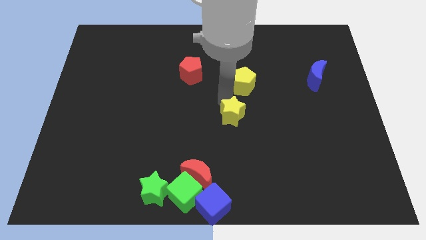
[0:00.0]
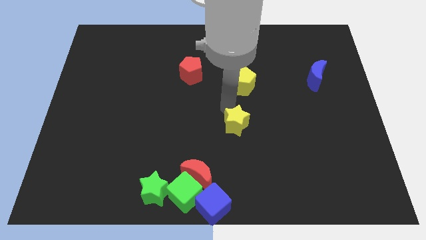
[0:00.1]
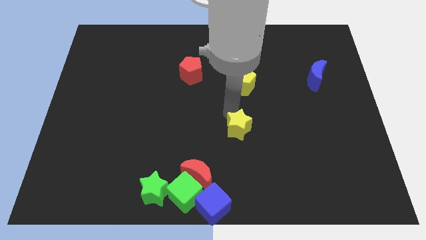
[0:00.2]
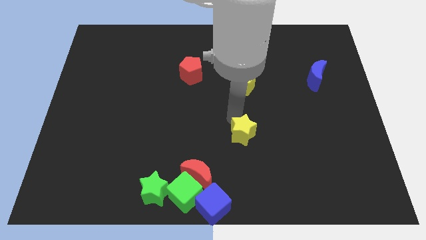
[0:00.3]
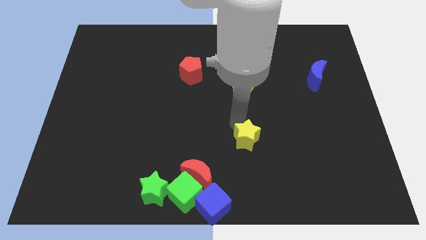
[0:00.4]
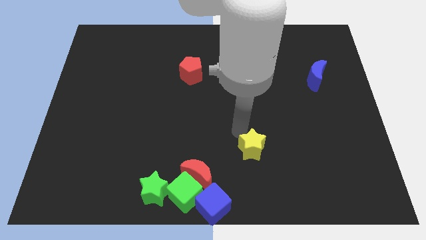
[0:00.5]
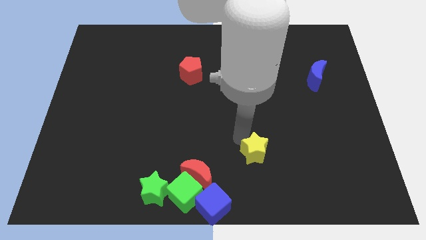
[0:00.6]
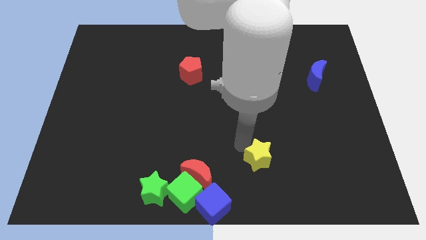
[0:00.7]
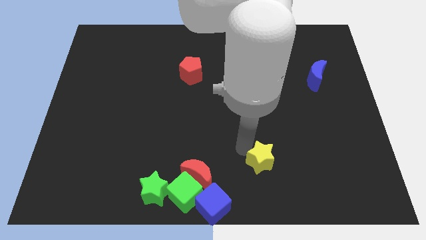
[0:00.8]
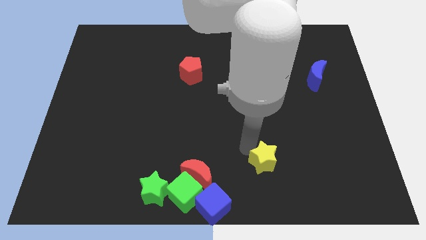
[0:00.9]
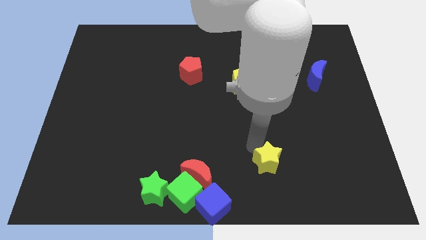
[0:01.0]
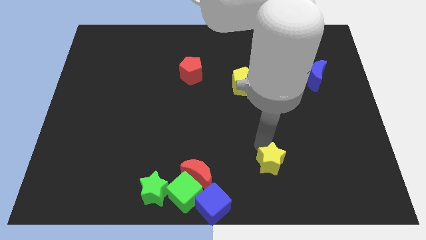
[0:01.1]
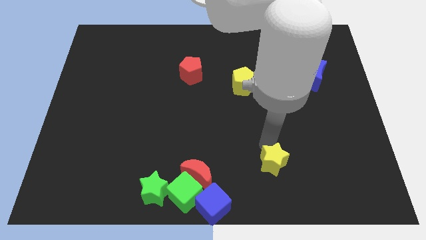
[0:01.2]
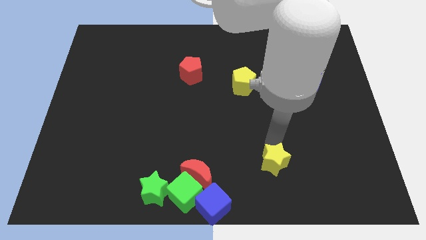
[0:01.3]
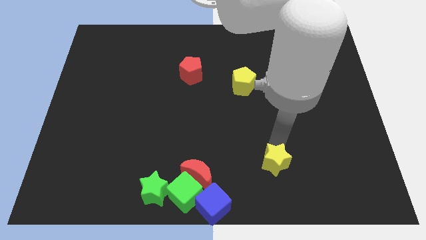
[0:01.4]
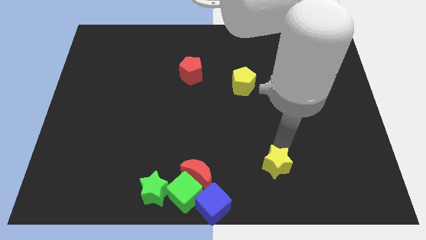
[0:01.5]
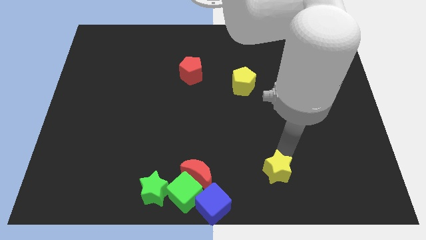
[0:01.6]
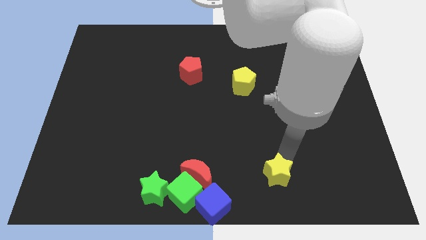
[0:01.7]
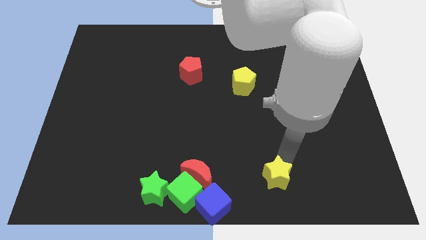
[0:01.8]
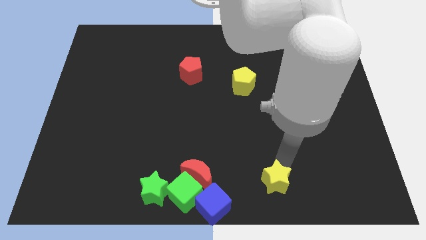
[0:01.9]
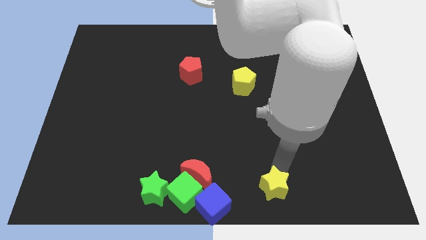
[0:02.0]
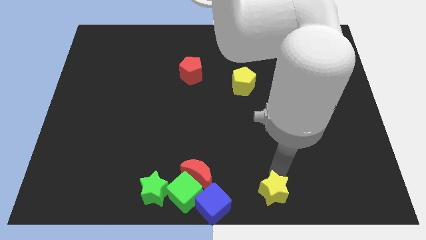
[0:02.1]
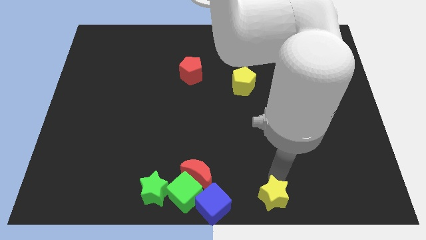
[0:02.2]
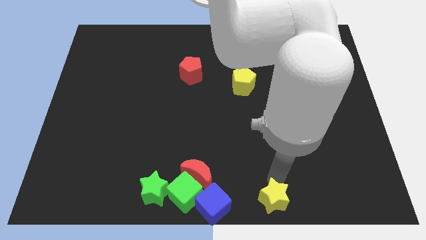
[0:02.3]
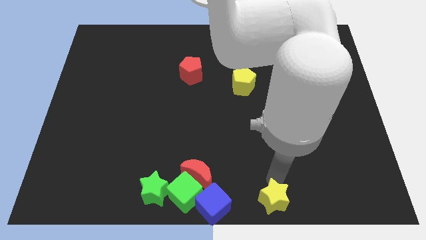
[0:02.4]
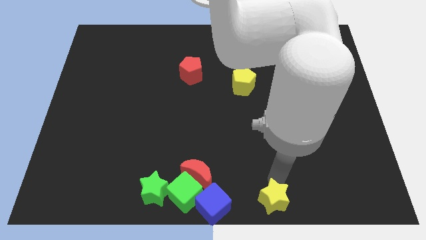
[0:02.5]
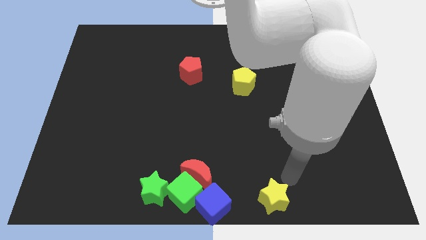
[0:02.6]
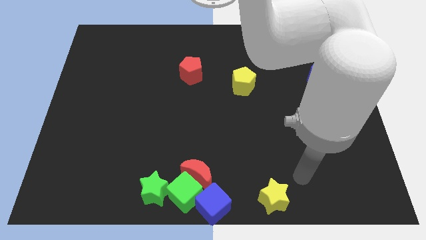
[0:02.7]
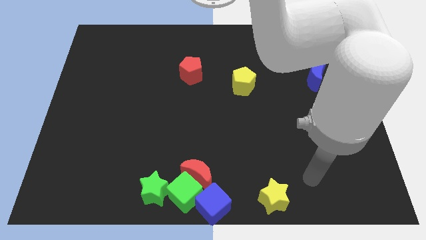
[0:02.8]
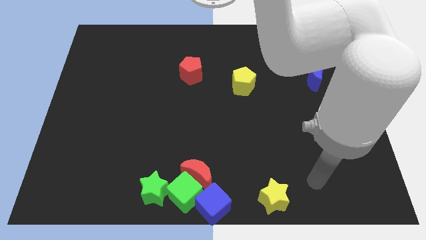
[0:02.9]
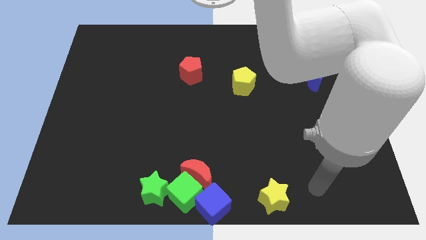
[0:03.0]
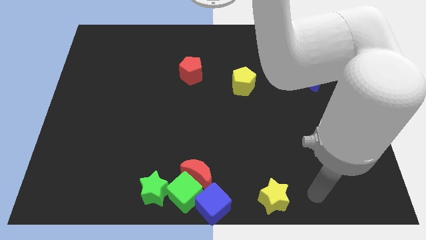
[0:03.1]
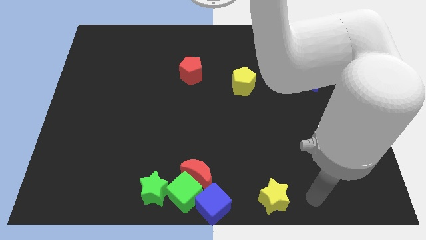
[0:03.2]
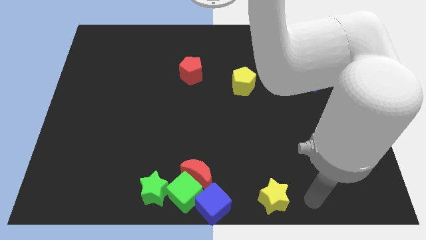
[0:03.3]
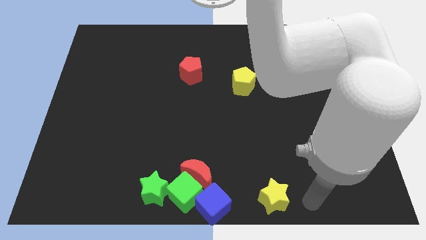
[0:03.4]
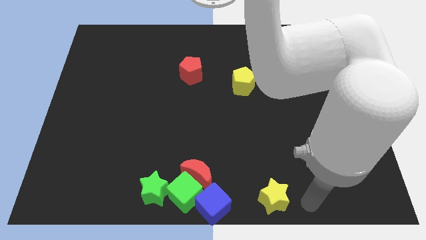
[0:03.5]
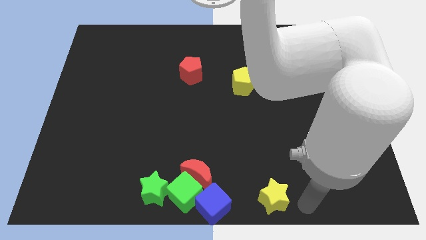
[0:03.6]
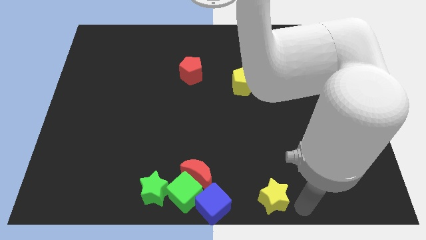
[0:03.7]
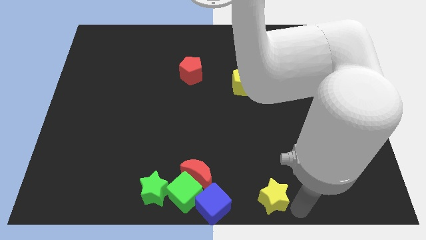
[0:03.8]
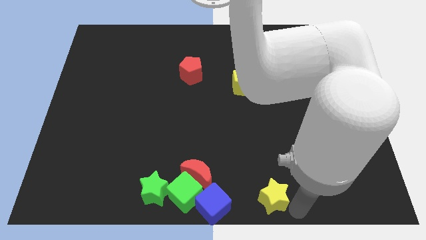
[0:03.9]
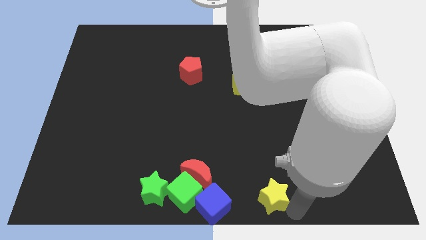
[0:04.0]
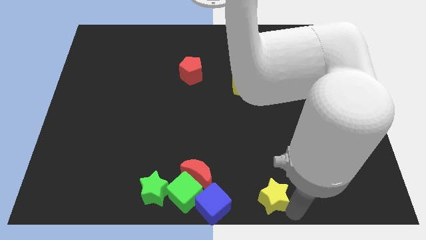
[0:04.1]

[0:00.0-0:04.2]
push the yellow star parallel to the blue cube

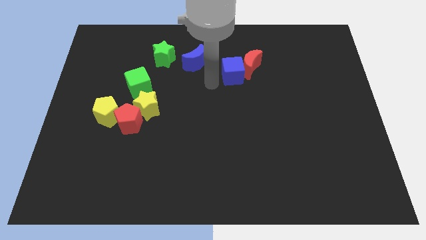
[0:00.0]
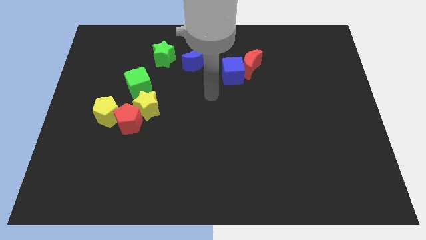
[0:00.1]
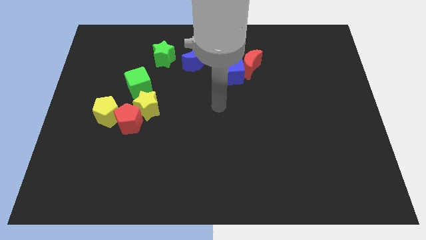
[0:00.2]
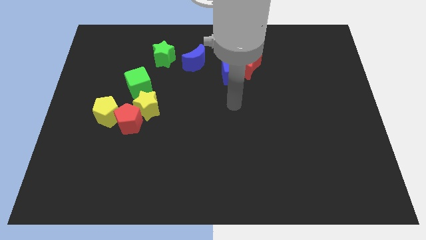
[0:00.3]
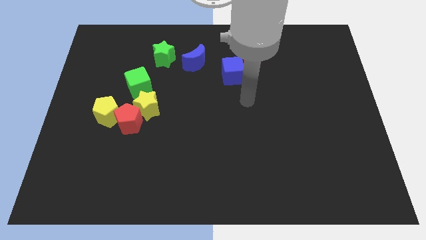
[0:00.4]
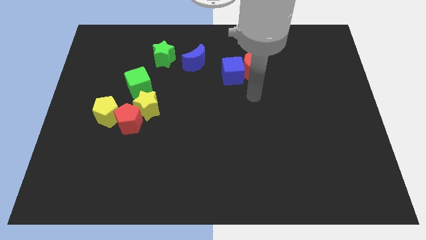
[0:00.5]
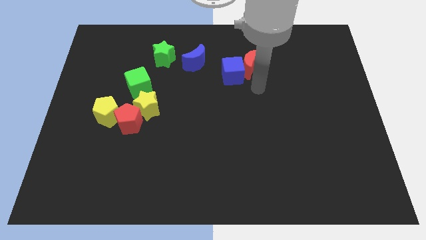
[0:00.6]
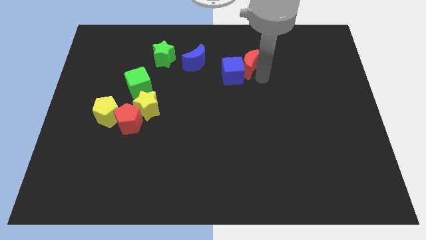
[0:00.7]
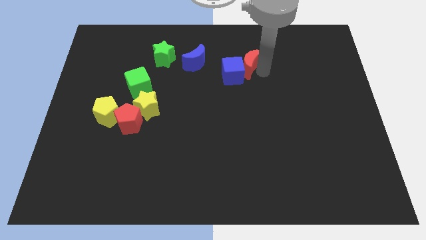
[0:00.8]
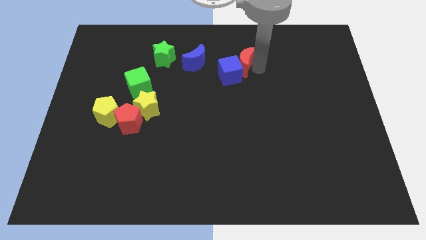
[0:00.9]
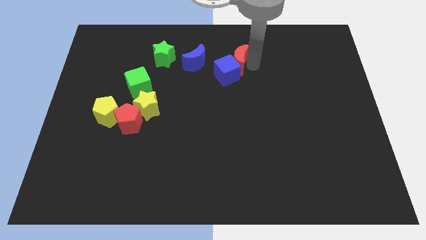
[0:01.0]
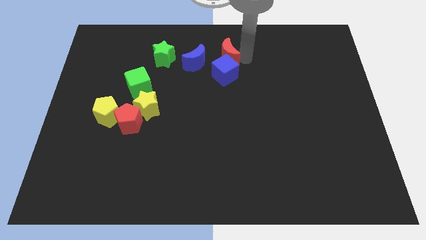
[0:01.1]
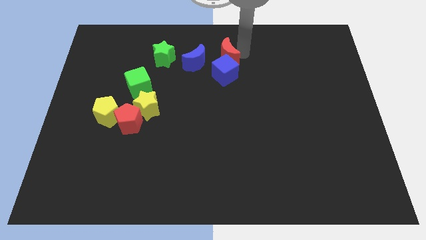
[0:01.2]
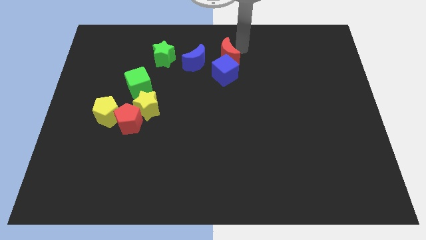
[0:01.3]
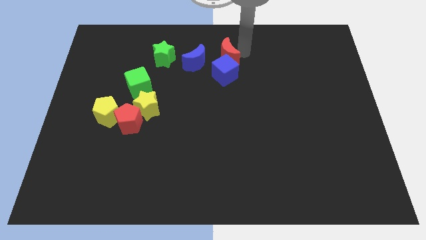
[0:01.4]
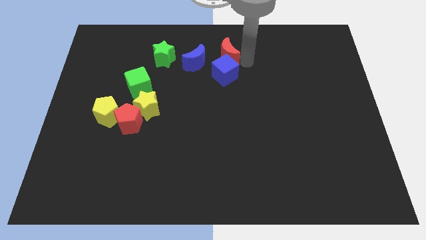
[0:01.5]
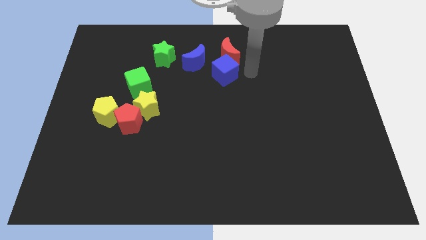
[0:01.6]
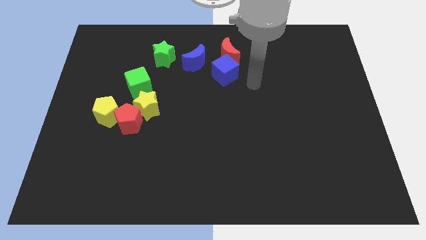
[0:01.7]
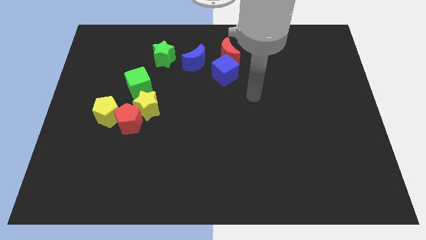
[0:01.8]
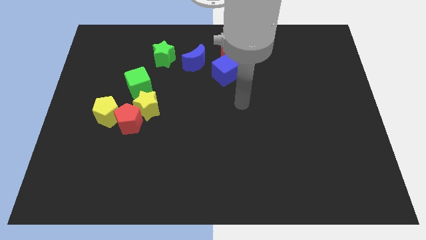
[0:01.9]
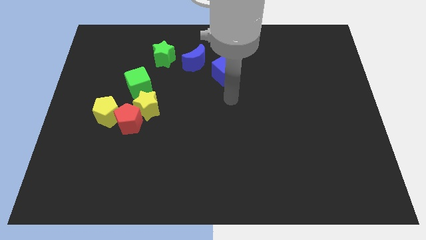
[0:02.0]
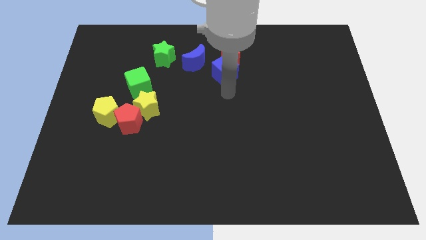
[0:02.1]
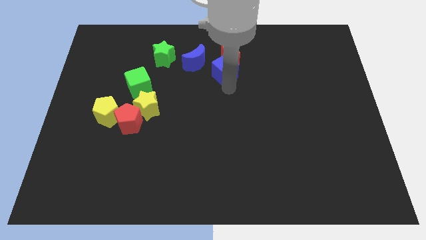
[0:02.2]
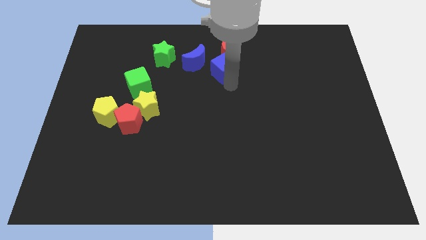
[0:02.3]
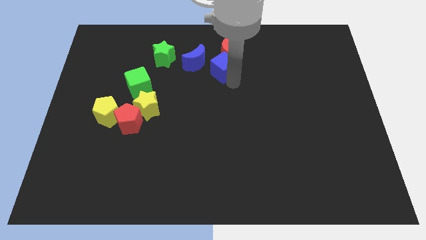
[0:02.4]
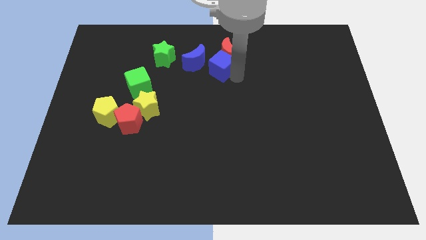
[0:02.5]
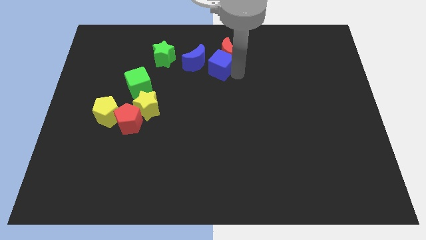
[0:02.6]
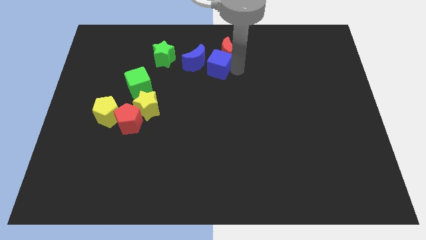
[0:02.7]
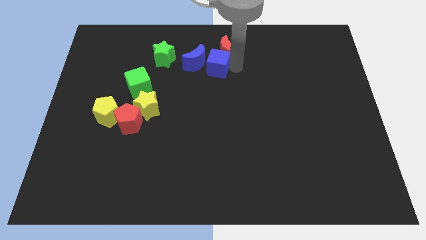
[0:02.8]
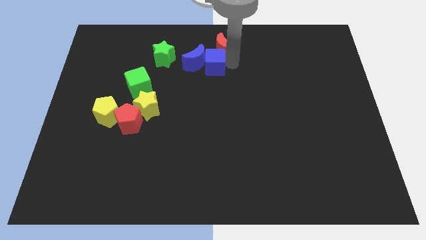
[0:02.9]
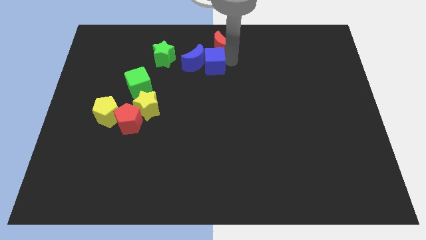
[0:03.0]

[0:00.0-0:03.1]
place the blue cube and red moon at the right side of the blue crescent

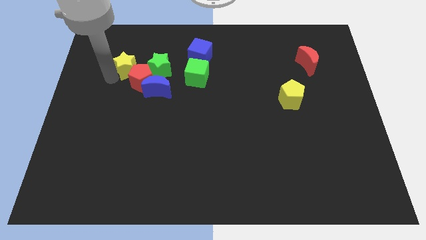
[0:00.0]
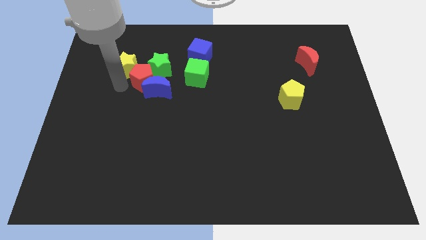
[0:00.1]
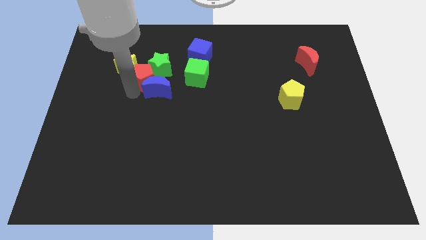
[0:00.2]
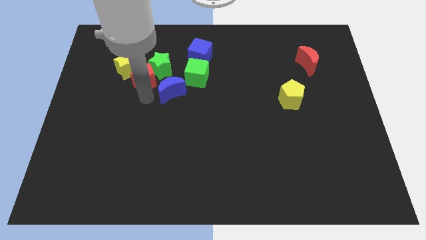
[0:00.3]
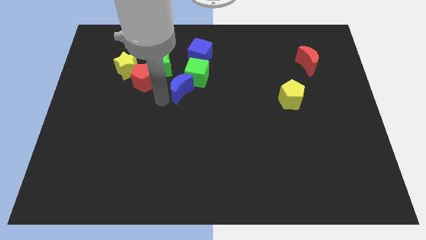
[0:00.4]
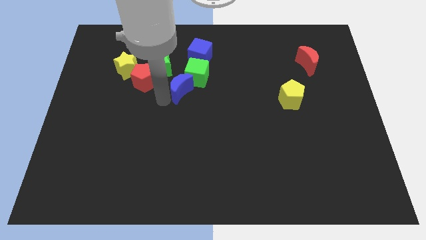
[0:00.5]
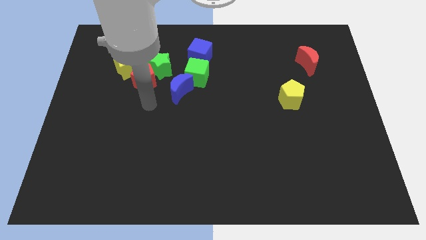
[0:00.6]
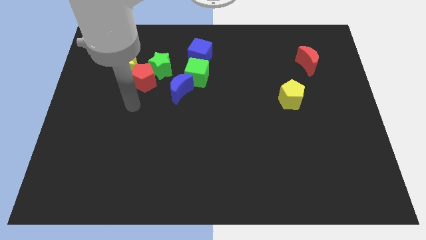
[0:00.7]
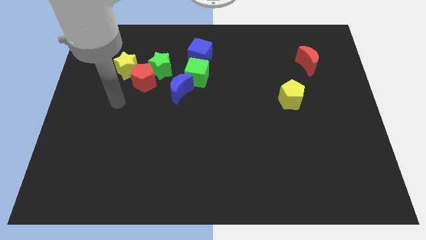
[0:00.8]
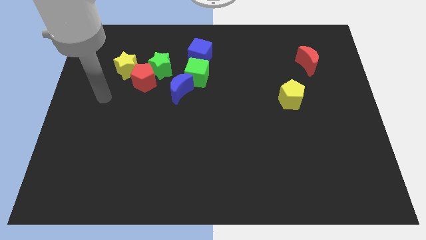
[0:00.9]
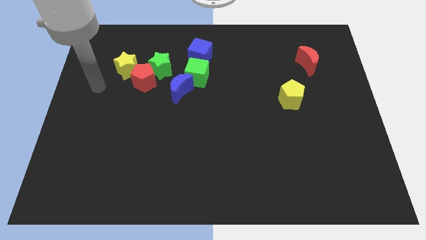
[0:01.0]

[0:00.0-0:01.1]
separate the blue moon from the red pentagon

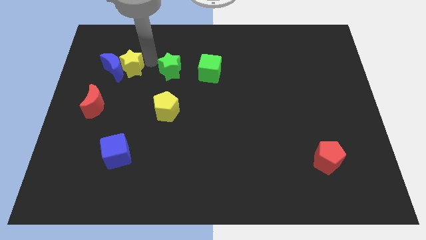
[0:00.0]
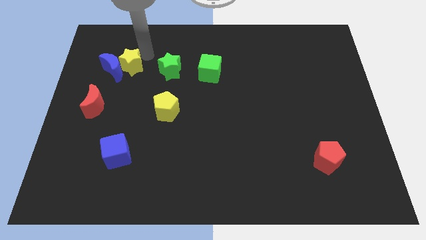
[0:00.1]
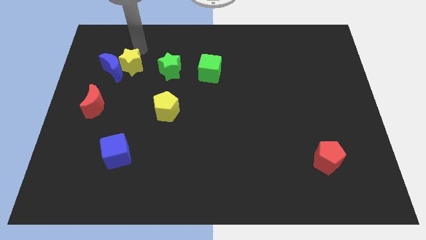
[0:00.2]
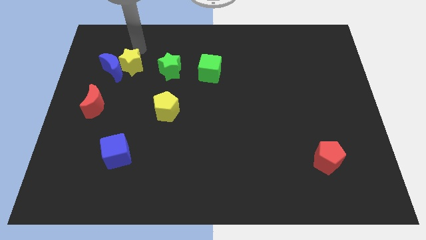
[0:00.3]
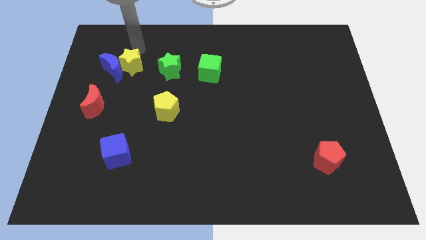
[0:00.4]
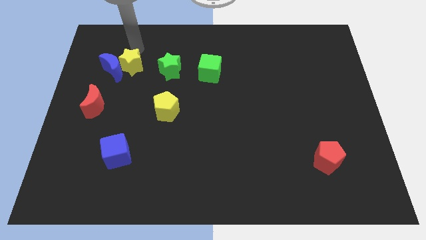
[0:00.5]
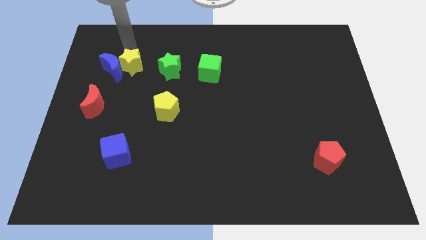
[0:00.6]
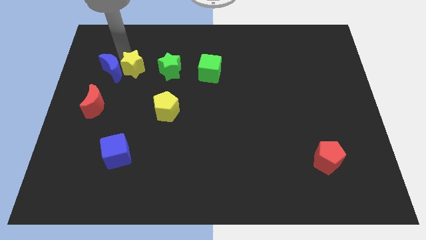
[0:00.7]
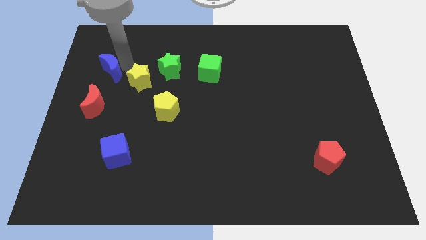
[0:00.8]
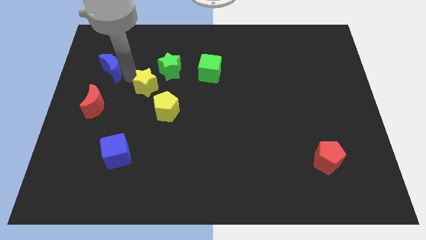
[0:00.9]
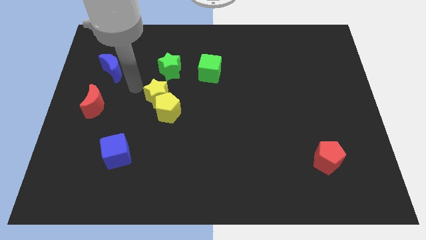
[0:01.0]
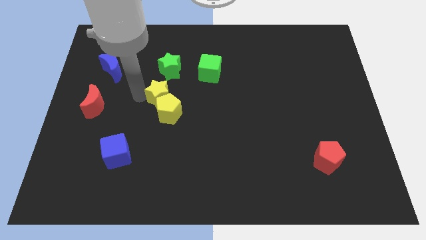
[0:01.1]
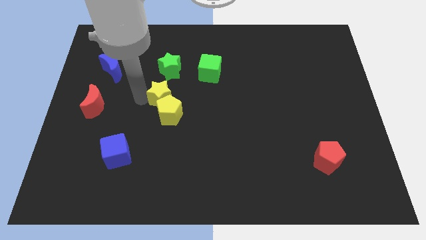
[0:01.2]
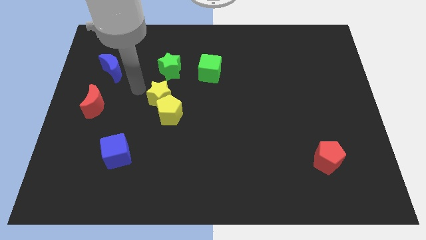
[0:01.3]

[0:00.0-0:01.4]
move yellow star close to yellow pentagon
